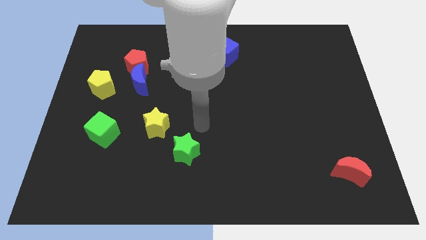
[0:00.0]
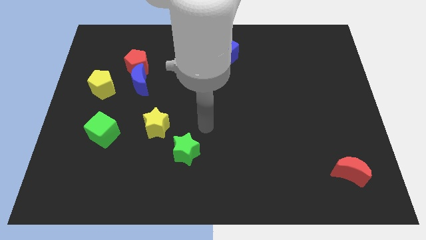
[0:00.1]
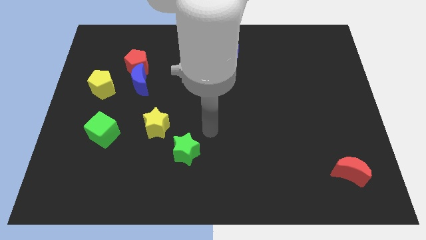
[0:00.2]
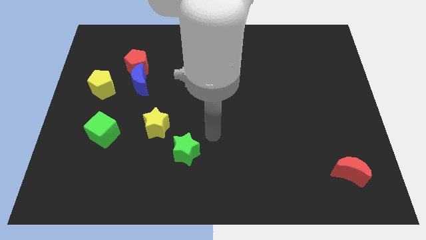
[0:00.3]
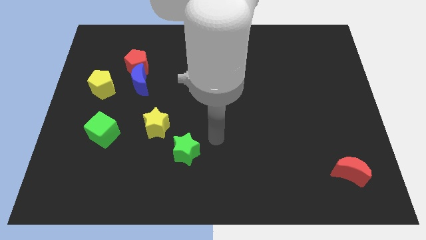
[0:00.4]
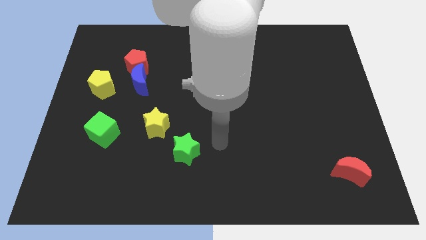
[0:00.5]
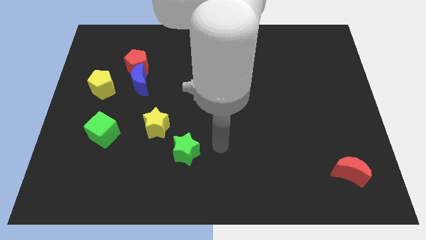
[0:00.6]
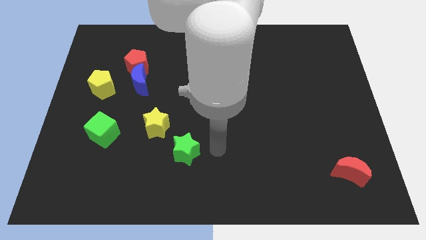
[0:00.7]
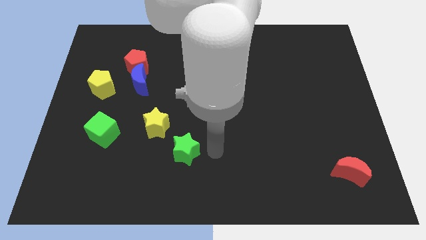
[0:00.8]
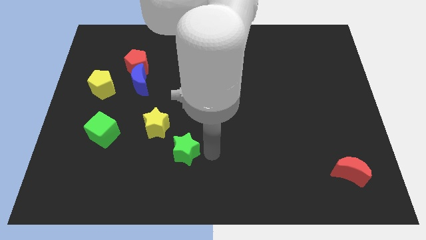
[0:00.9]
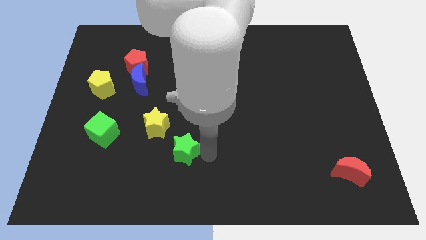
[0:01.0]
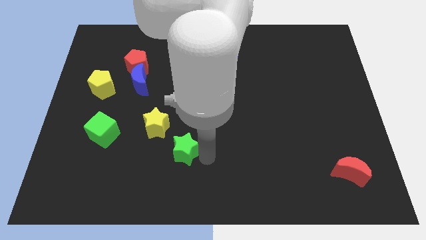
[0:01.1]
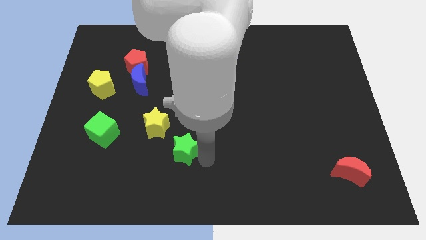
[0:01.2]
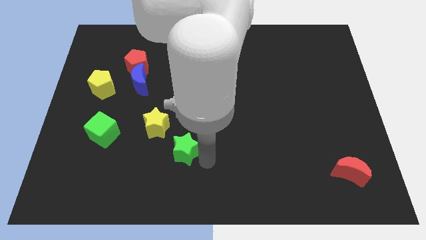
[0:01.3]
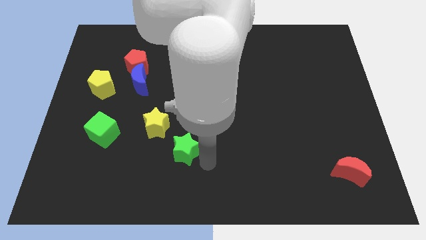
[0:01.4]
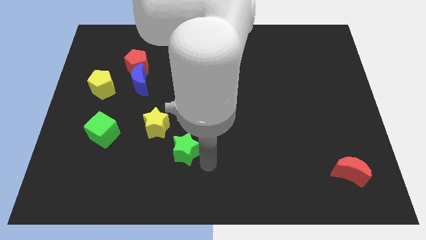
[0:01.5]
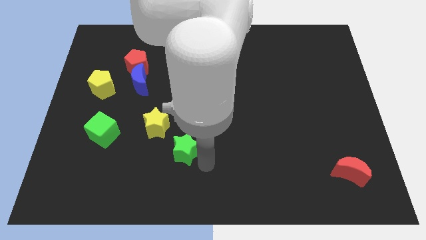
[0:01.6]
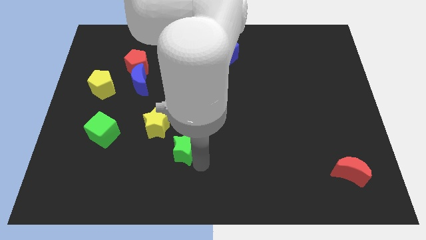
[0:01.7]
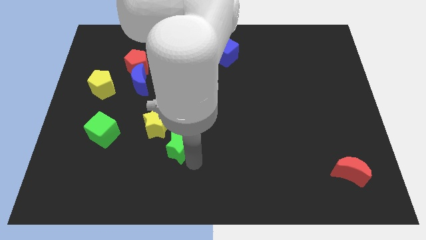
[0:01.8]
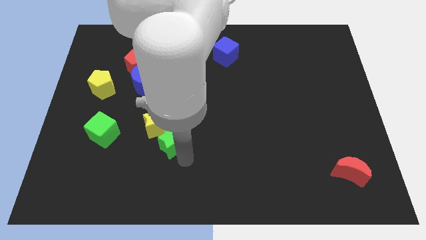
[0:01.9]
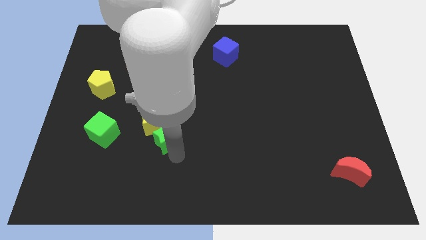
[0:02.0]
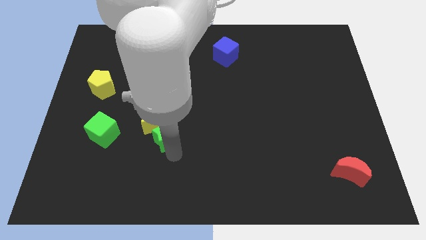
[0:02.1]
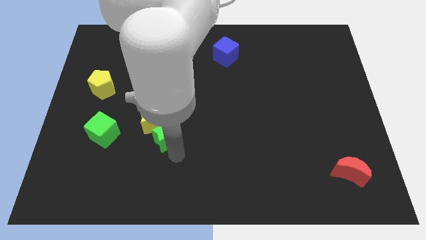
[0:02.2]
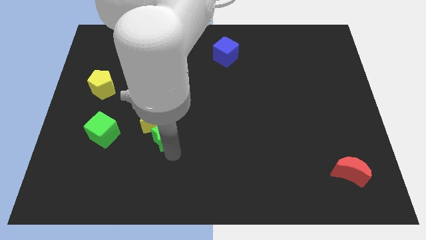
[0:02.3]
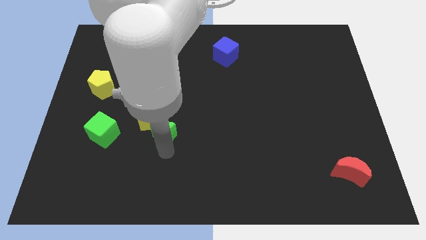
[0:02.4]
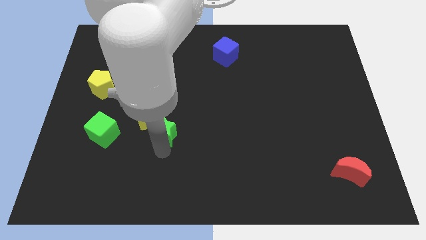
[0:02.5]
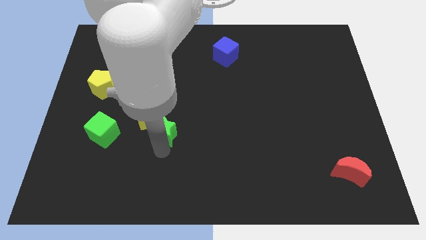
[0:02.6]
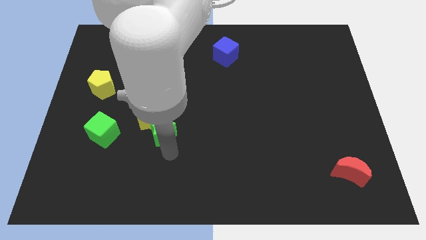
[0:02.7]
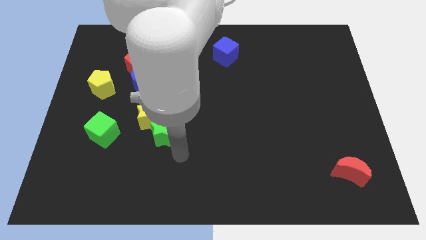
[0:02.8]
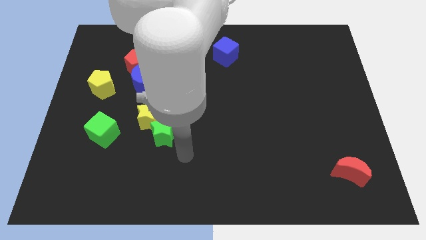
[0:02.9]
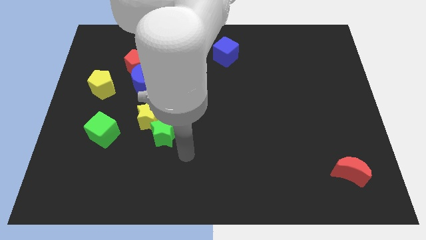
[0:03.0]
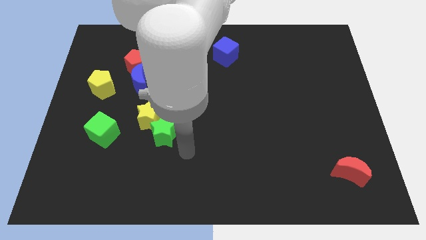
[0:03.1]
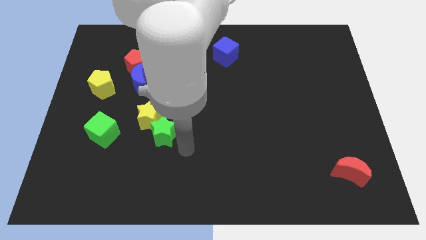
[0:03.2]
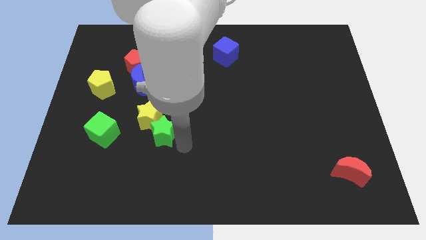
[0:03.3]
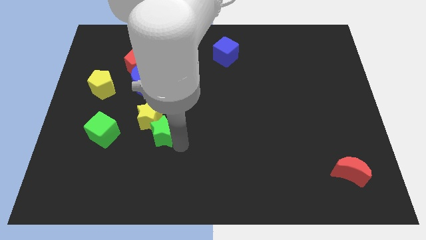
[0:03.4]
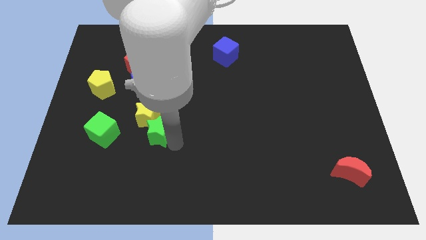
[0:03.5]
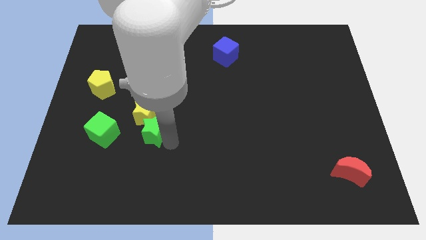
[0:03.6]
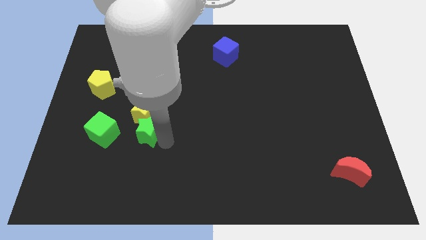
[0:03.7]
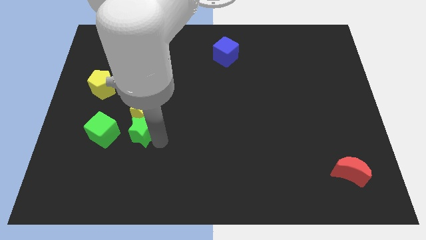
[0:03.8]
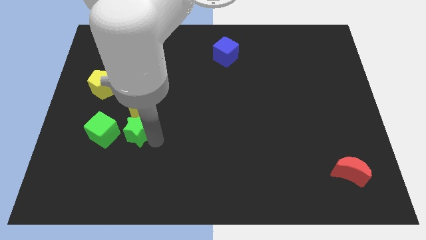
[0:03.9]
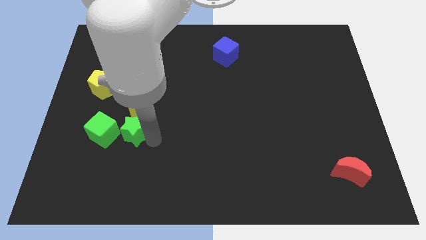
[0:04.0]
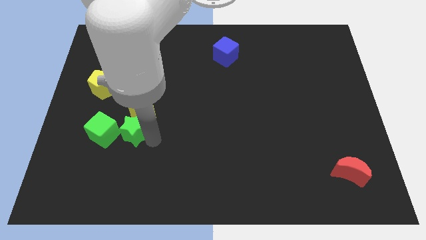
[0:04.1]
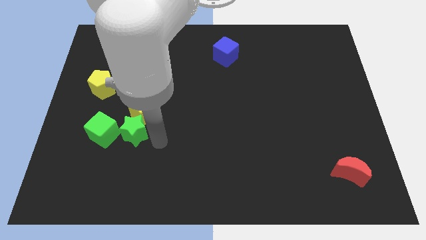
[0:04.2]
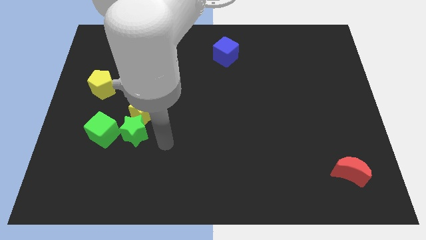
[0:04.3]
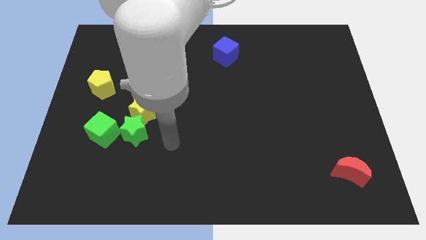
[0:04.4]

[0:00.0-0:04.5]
place the green star right to the green cube

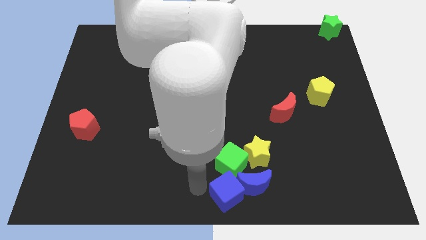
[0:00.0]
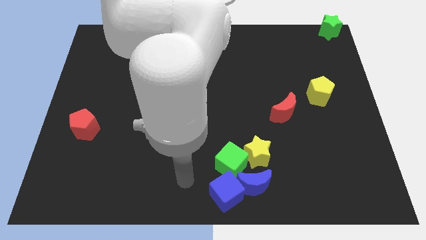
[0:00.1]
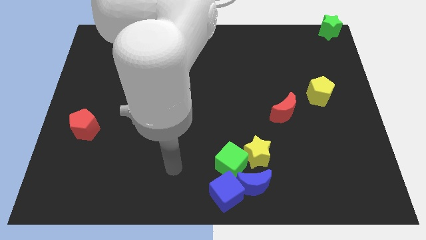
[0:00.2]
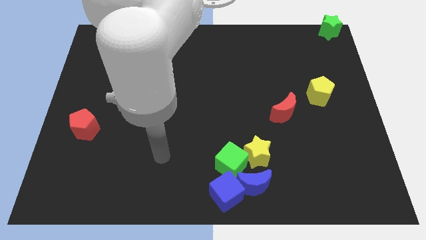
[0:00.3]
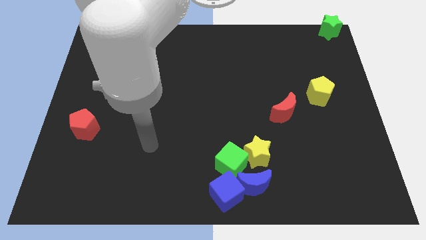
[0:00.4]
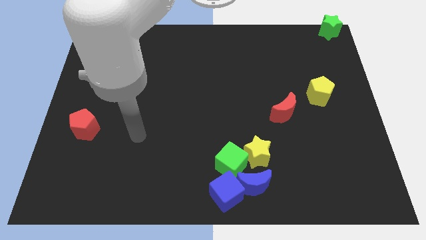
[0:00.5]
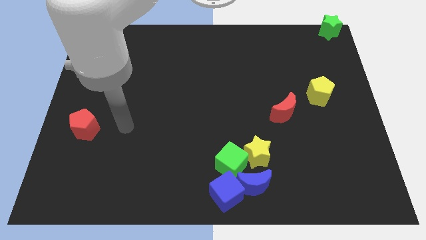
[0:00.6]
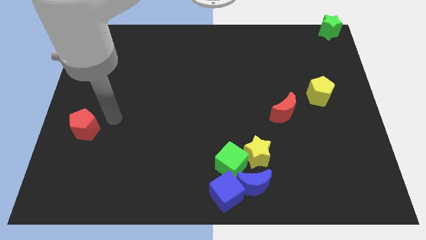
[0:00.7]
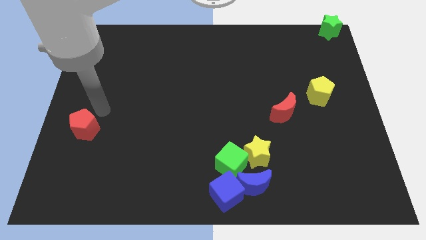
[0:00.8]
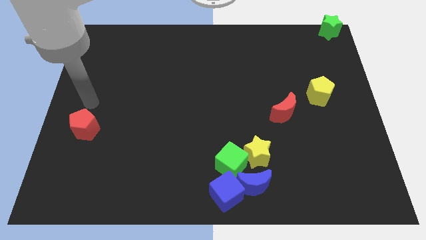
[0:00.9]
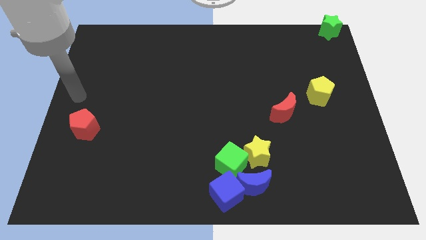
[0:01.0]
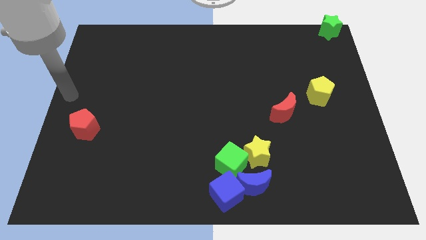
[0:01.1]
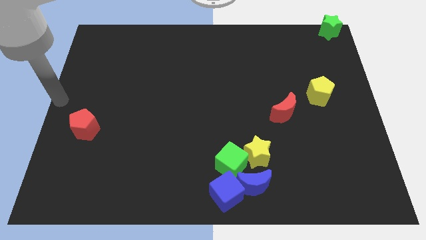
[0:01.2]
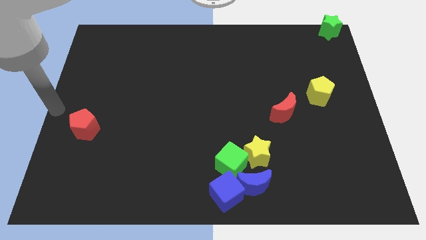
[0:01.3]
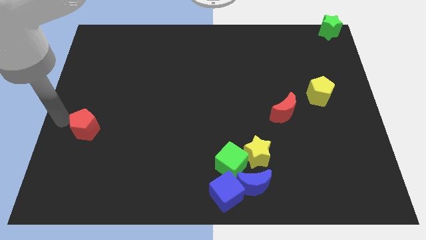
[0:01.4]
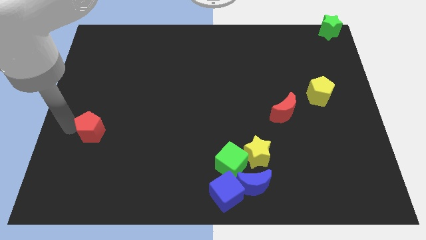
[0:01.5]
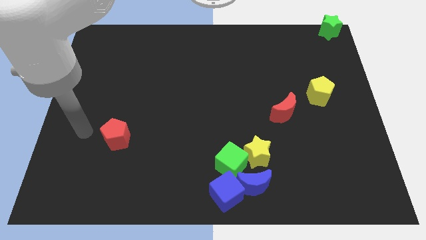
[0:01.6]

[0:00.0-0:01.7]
touch the red pentagon

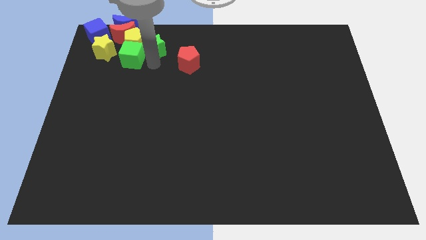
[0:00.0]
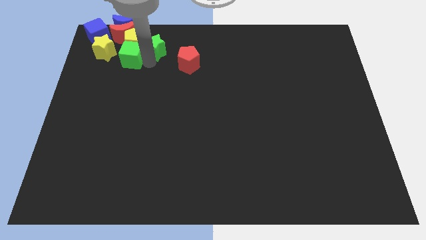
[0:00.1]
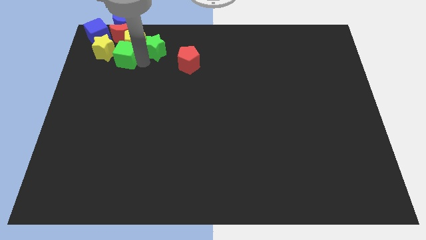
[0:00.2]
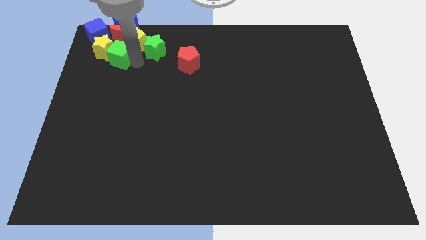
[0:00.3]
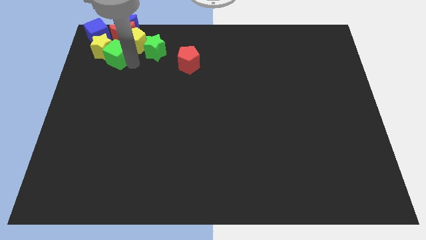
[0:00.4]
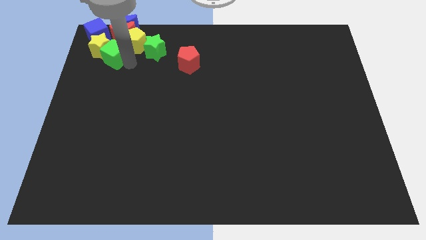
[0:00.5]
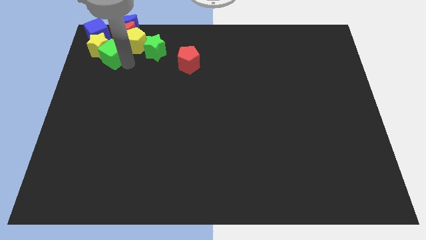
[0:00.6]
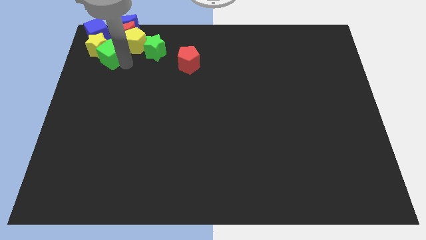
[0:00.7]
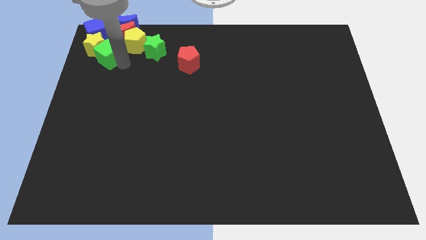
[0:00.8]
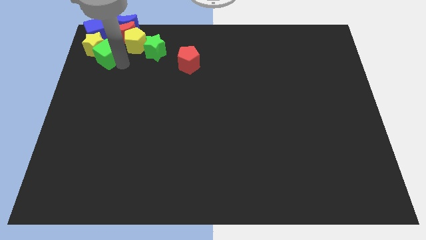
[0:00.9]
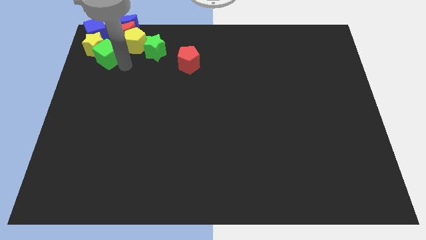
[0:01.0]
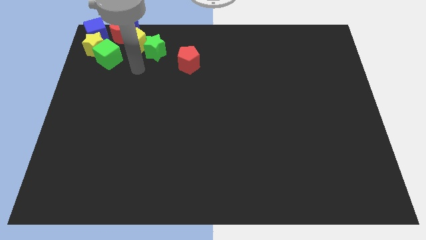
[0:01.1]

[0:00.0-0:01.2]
push green cube into yellow star

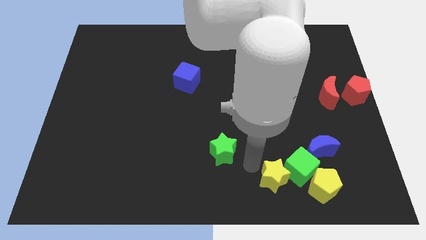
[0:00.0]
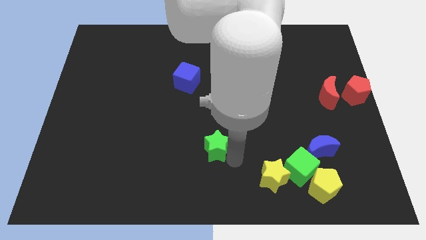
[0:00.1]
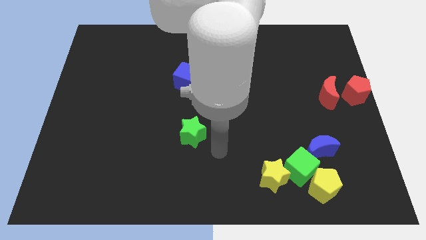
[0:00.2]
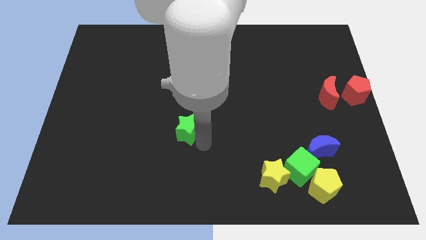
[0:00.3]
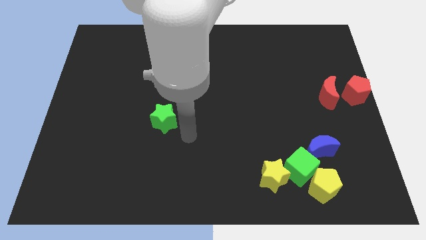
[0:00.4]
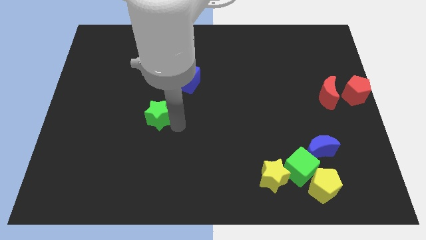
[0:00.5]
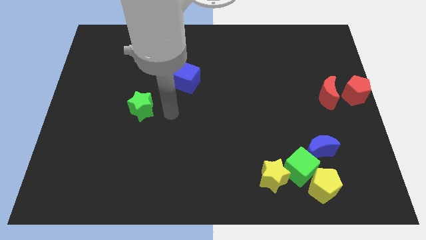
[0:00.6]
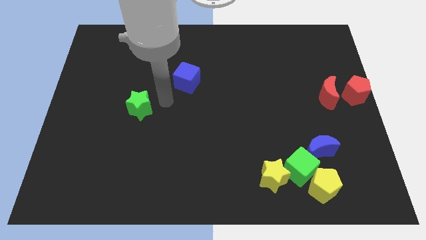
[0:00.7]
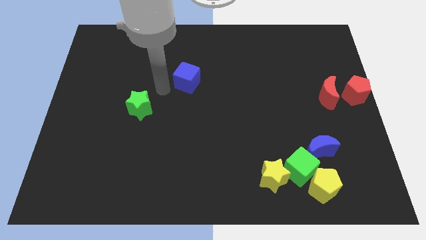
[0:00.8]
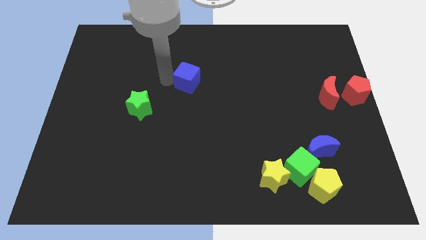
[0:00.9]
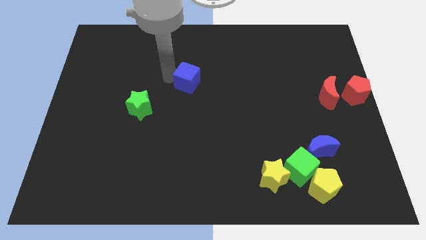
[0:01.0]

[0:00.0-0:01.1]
push the green star slightly towards the center left of the board

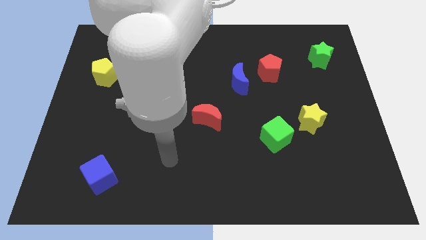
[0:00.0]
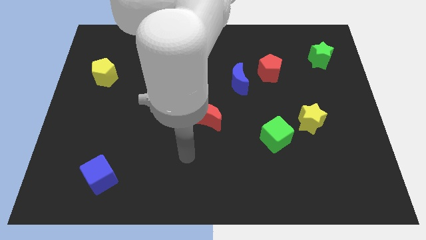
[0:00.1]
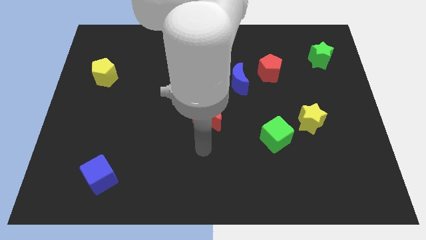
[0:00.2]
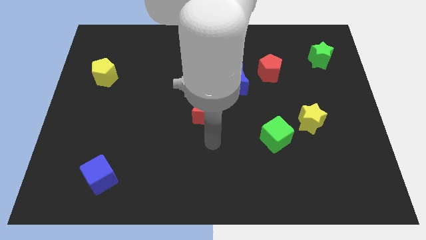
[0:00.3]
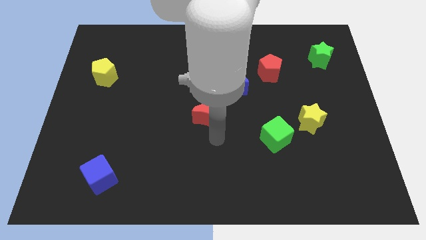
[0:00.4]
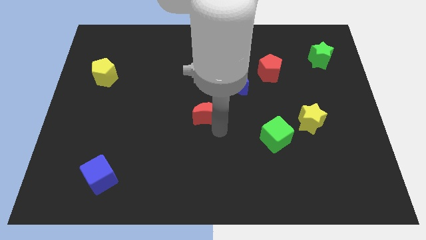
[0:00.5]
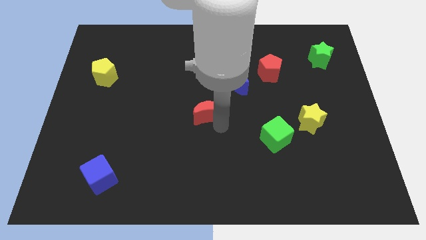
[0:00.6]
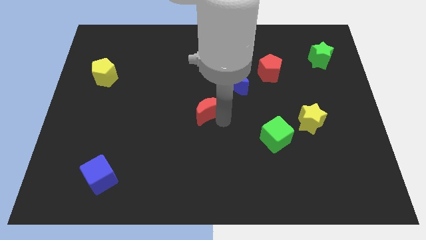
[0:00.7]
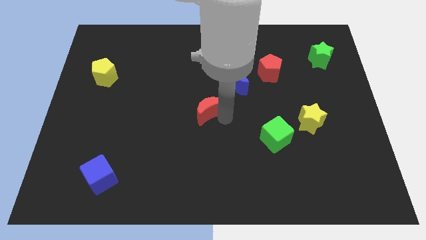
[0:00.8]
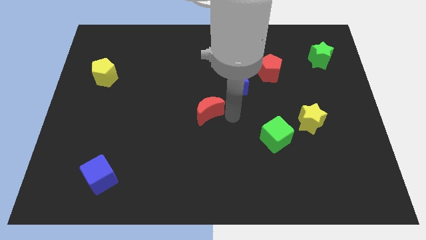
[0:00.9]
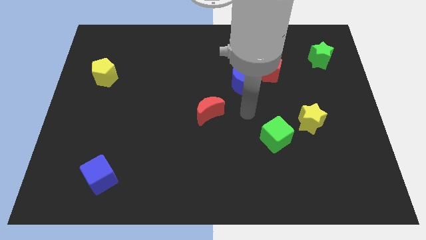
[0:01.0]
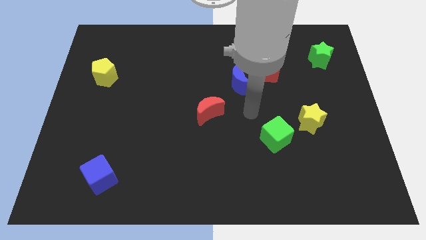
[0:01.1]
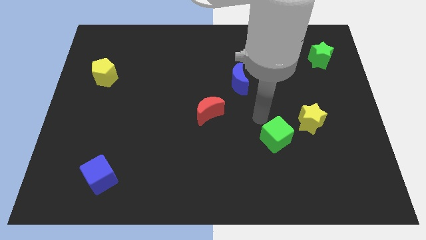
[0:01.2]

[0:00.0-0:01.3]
move the red crescent to the center of the board
